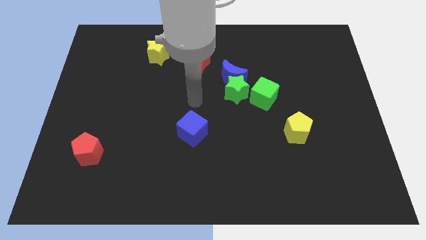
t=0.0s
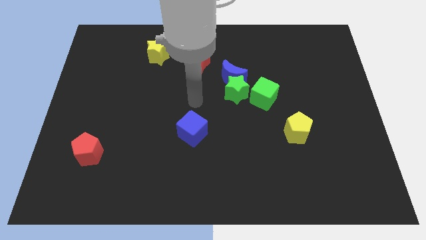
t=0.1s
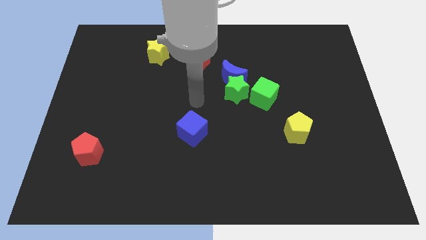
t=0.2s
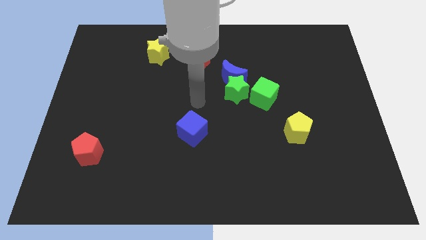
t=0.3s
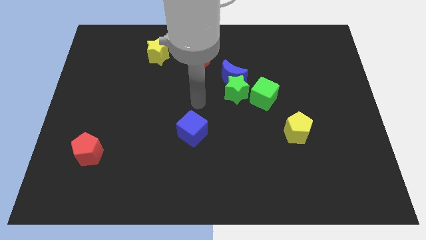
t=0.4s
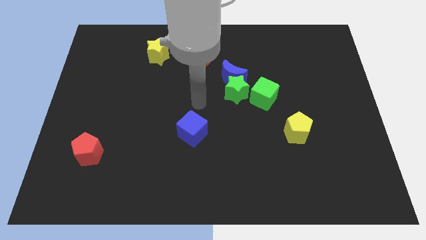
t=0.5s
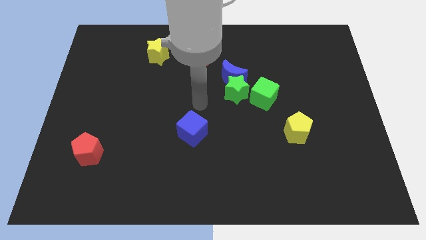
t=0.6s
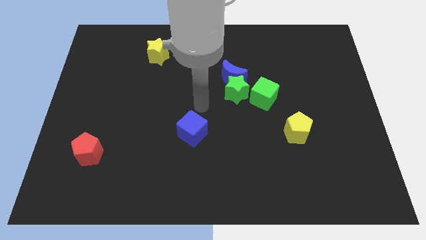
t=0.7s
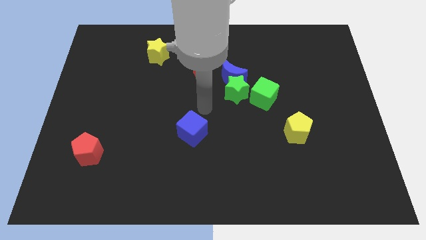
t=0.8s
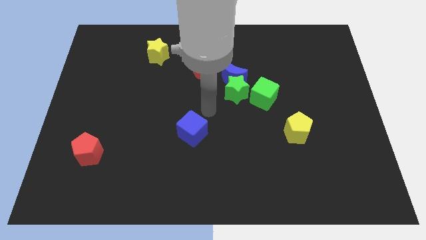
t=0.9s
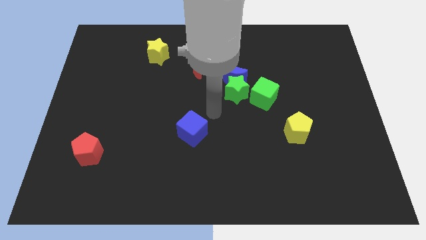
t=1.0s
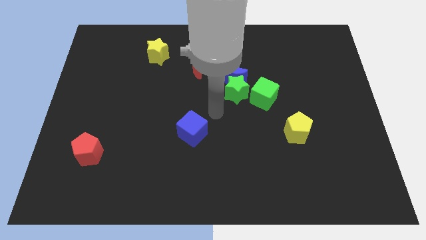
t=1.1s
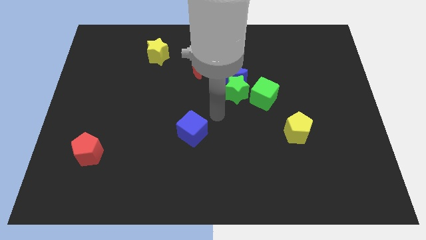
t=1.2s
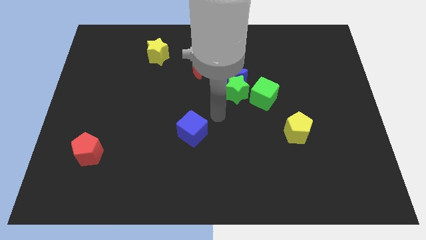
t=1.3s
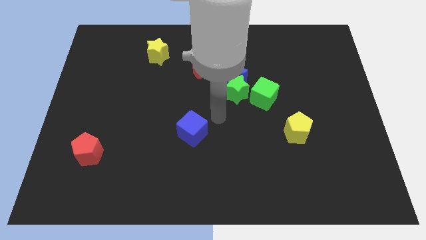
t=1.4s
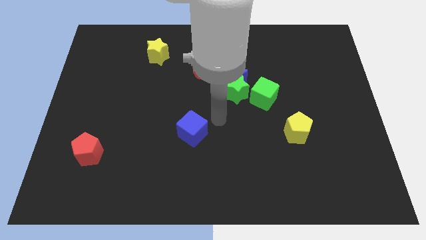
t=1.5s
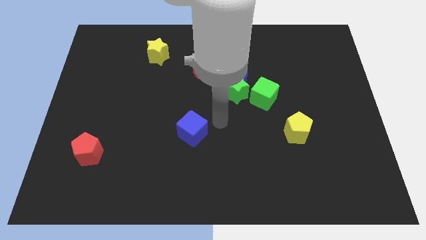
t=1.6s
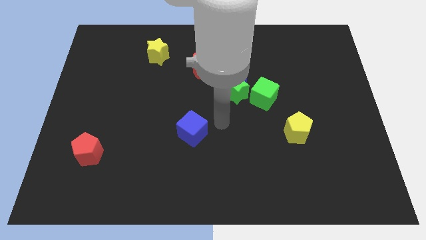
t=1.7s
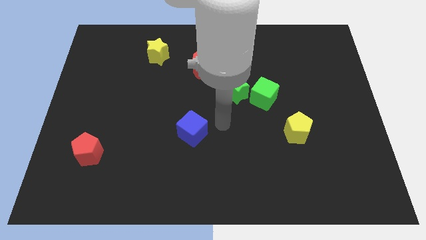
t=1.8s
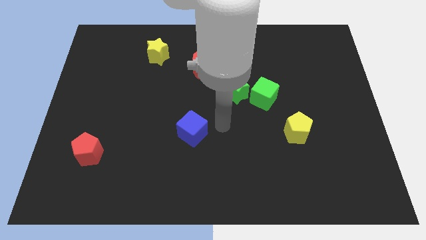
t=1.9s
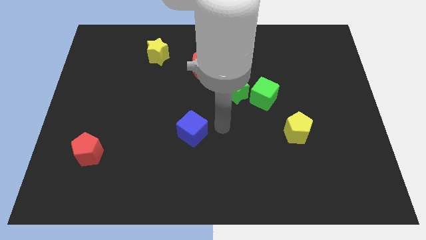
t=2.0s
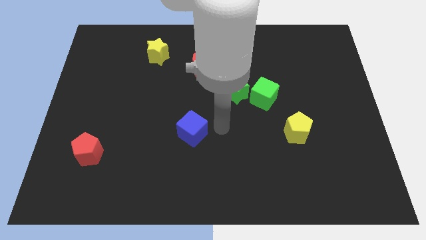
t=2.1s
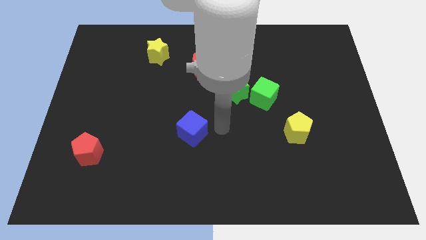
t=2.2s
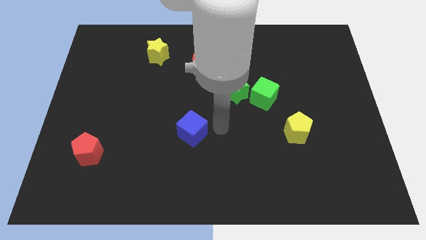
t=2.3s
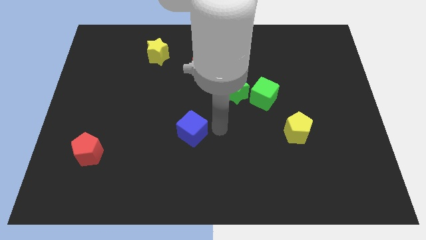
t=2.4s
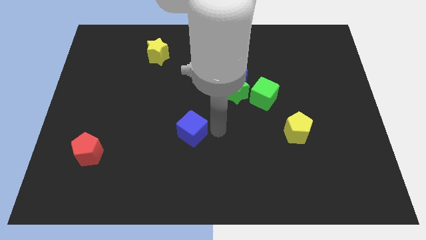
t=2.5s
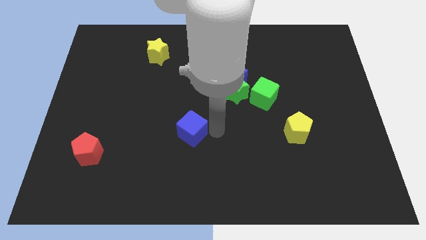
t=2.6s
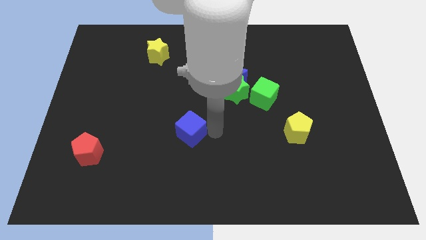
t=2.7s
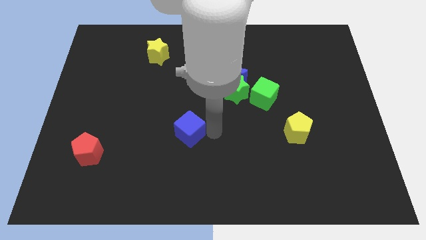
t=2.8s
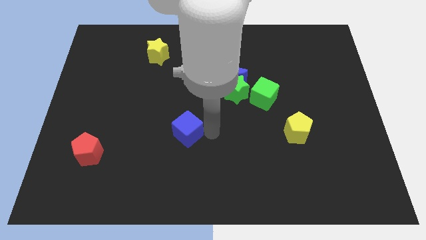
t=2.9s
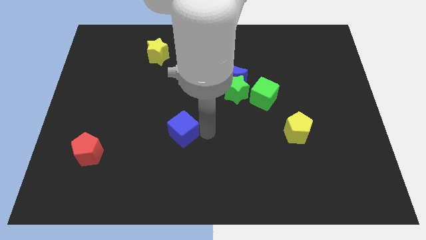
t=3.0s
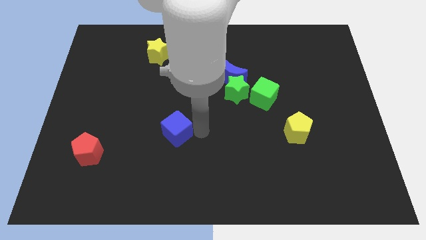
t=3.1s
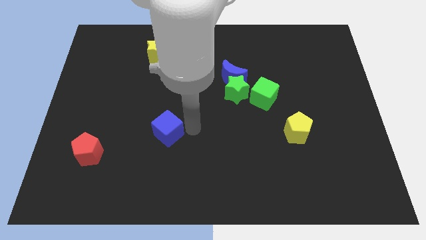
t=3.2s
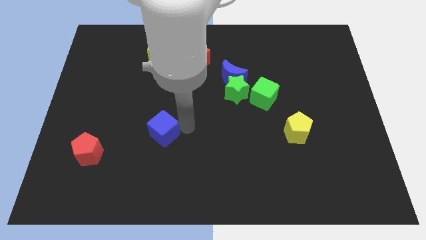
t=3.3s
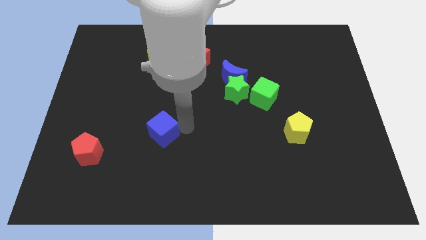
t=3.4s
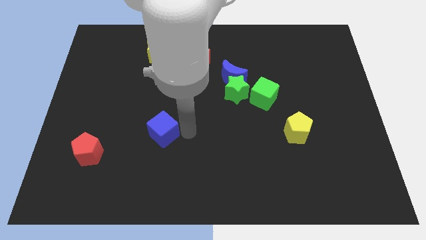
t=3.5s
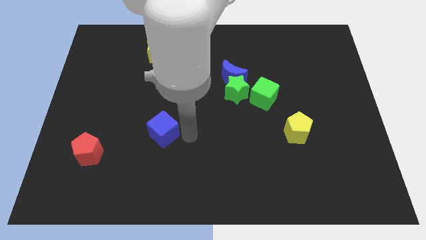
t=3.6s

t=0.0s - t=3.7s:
place the blue cube slightly towards the left side

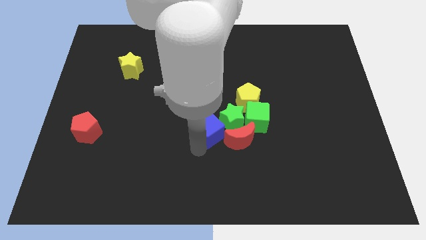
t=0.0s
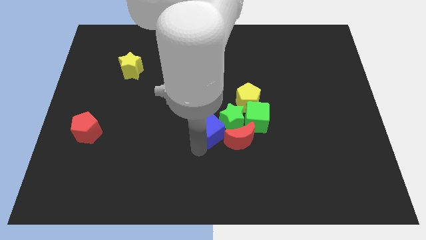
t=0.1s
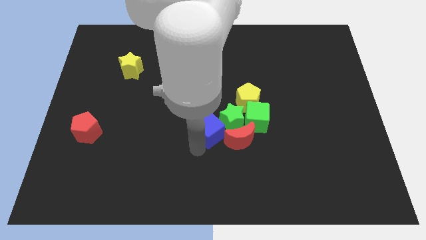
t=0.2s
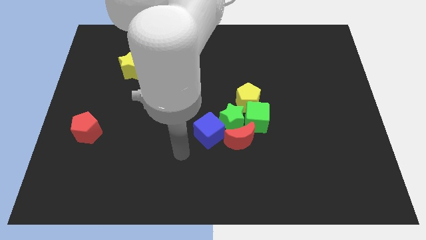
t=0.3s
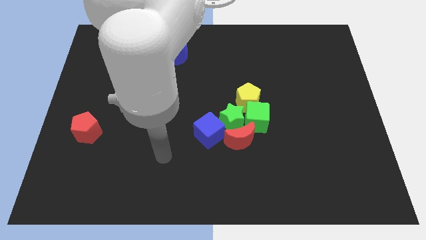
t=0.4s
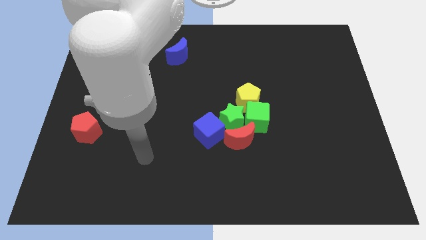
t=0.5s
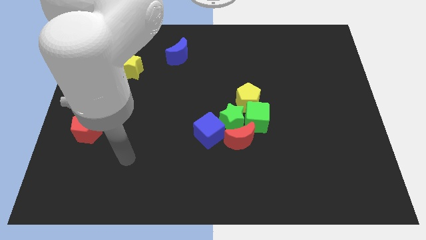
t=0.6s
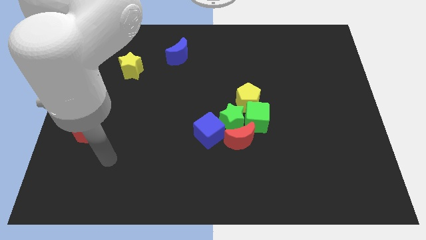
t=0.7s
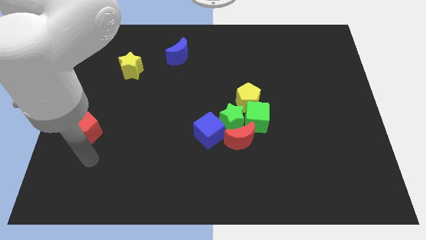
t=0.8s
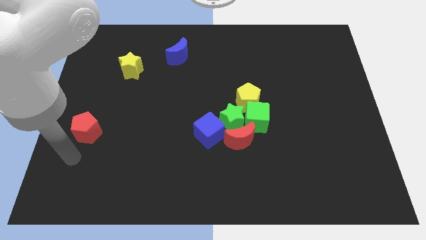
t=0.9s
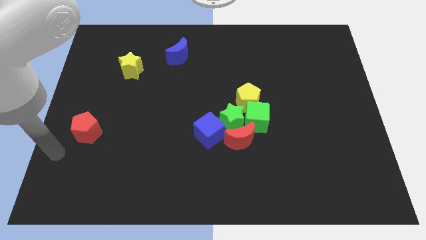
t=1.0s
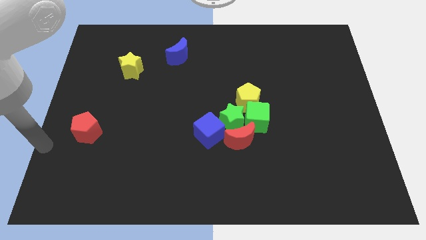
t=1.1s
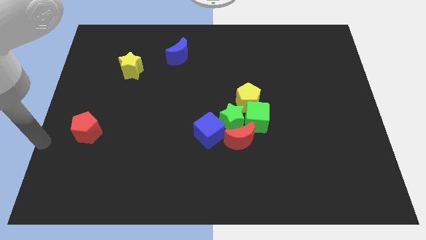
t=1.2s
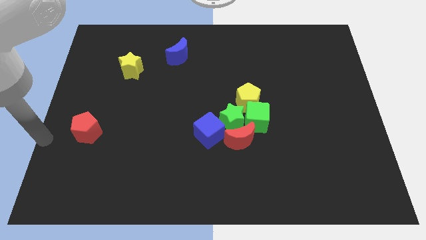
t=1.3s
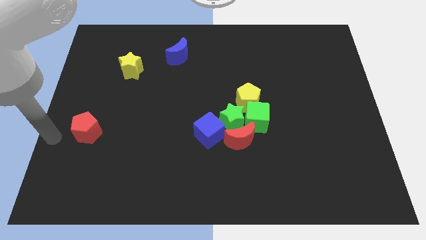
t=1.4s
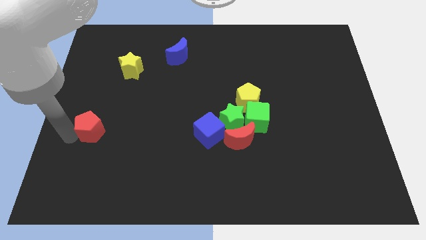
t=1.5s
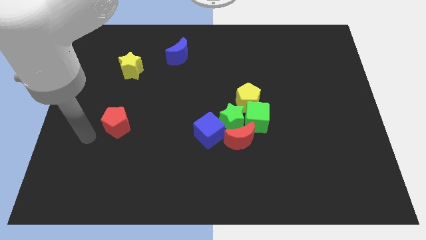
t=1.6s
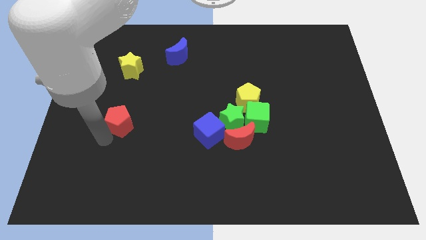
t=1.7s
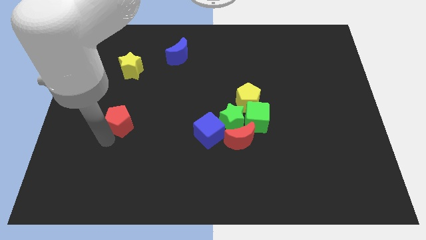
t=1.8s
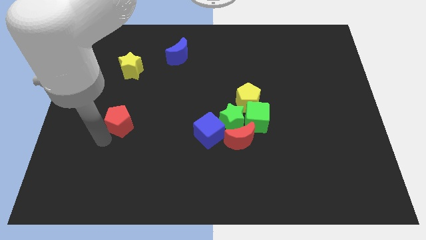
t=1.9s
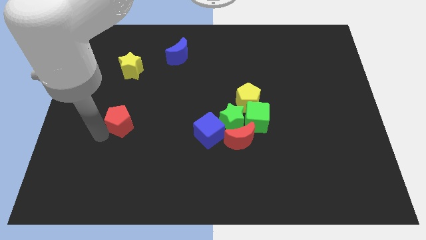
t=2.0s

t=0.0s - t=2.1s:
place the red pentagon below the yellow star

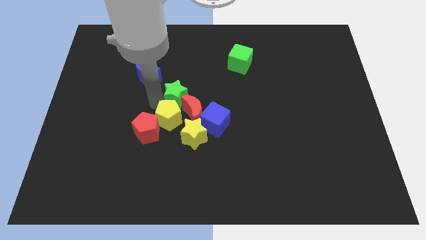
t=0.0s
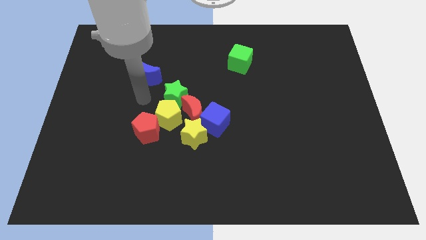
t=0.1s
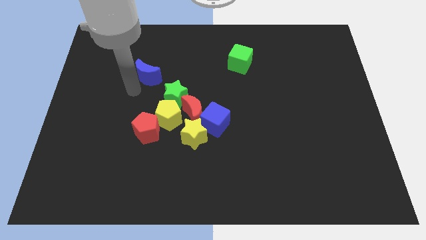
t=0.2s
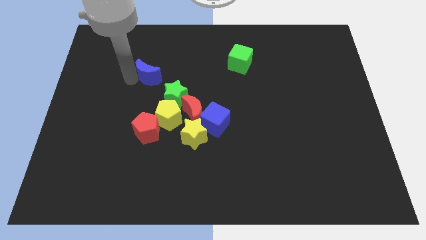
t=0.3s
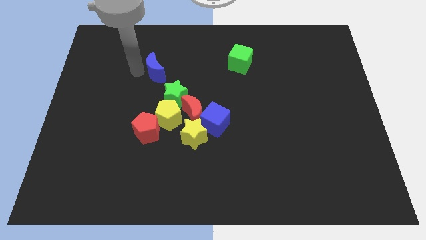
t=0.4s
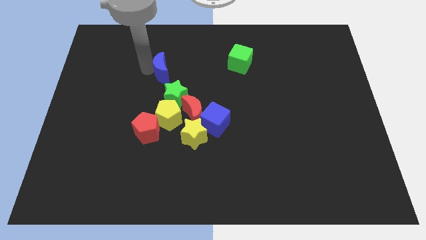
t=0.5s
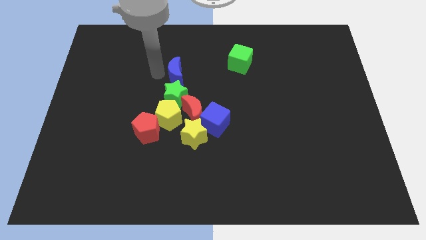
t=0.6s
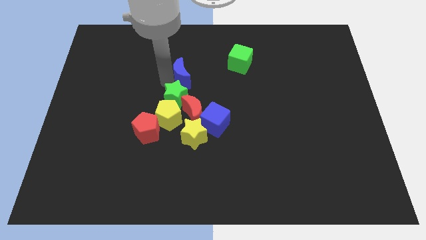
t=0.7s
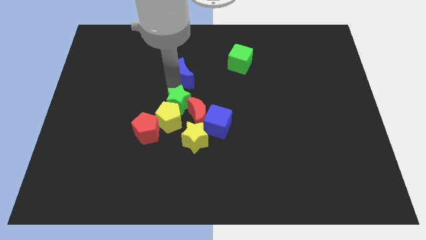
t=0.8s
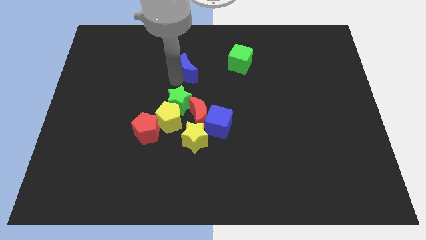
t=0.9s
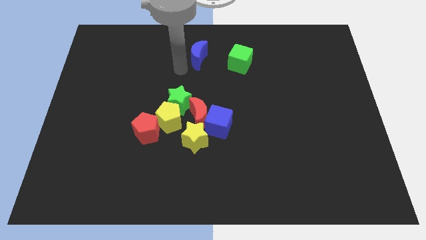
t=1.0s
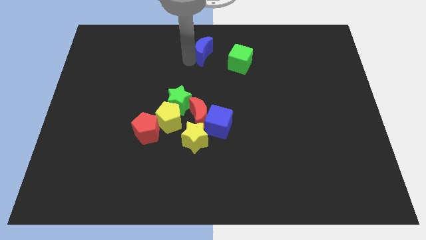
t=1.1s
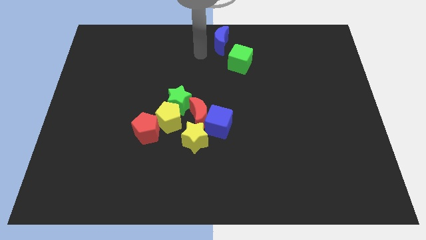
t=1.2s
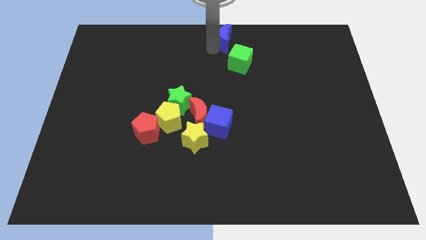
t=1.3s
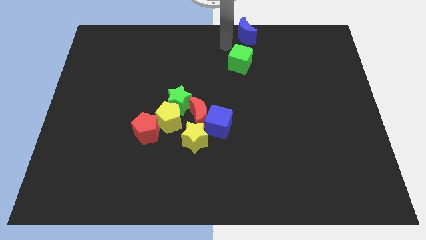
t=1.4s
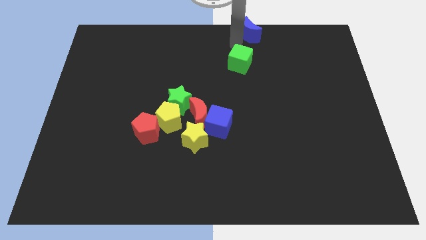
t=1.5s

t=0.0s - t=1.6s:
push the blue crescent towards top

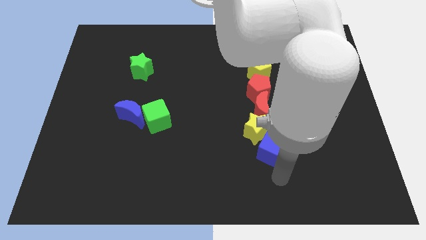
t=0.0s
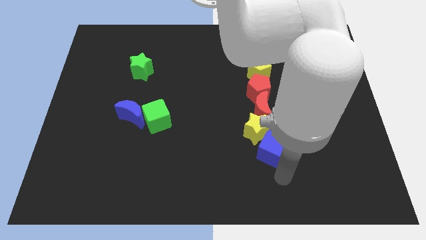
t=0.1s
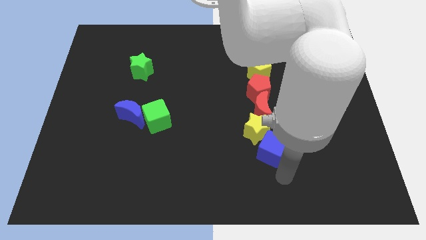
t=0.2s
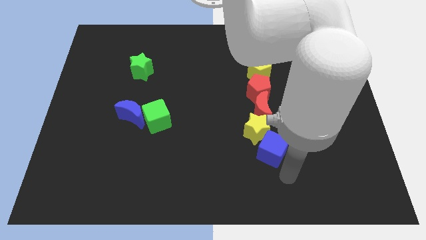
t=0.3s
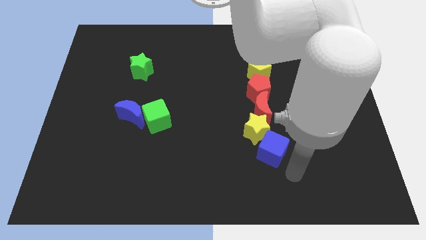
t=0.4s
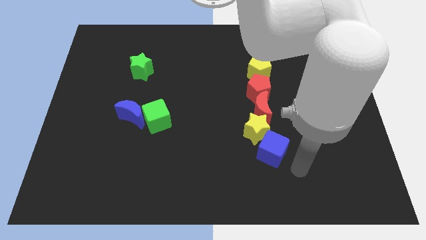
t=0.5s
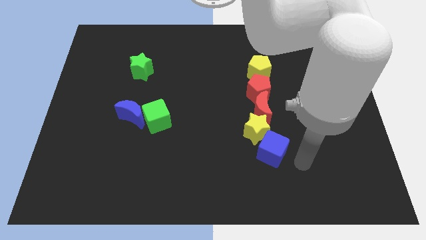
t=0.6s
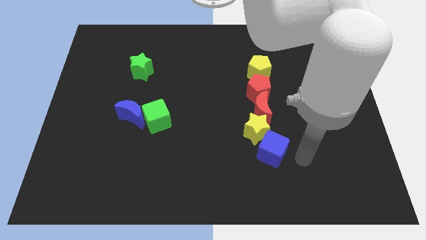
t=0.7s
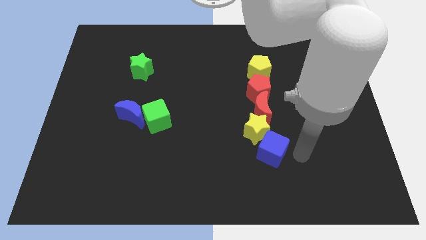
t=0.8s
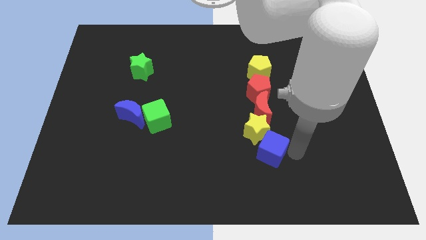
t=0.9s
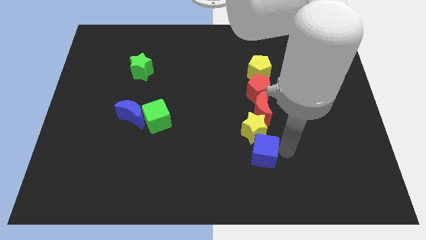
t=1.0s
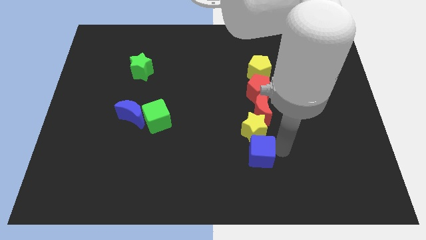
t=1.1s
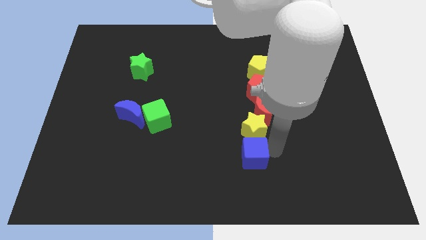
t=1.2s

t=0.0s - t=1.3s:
adjust the blue cube to the bottom of the yellow star

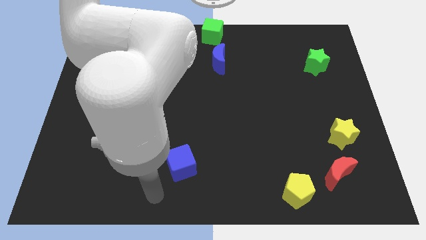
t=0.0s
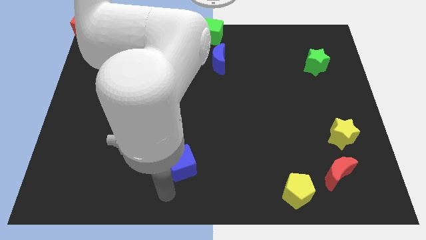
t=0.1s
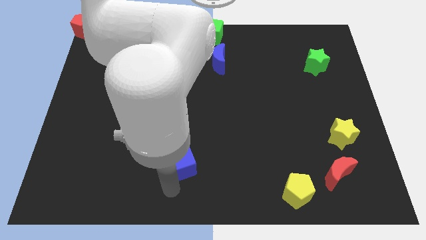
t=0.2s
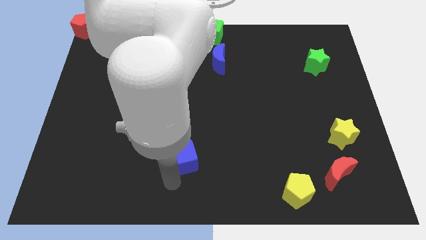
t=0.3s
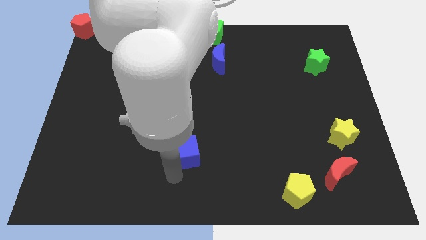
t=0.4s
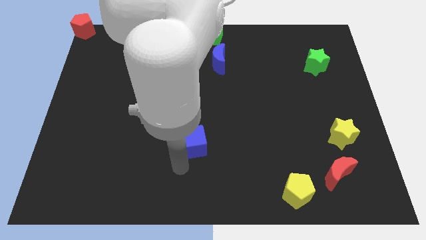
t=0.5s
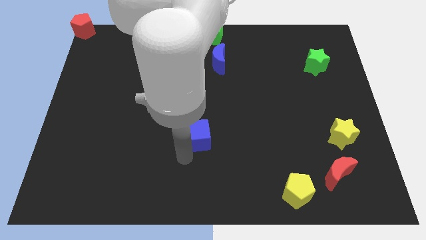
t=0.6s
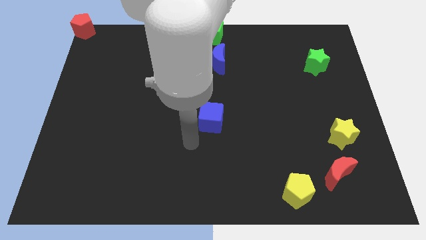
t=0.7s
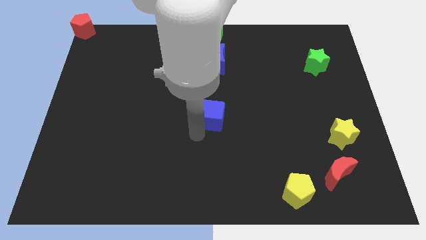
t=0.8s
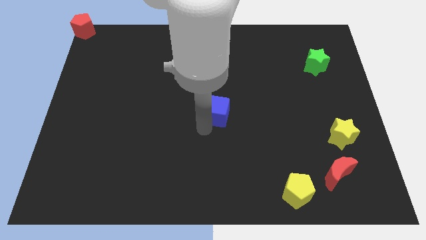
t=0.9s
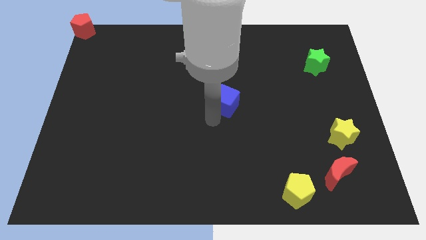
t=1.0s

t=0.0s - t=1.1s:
push the blue cube to the center of the board
